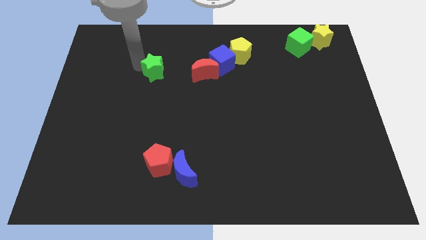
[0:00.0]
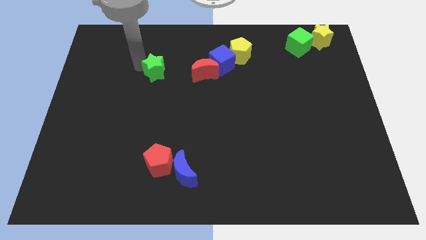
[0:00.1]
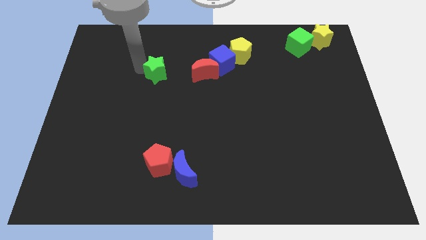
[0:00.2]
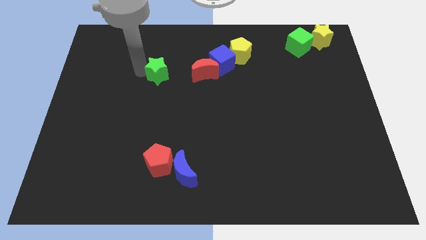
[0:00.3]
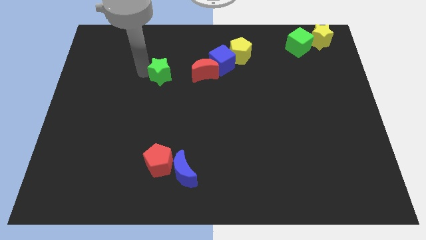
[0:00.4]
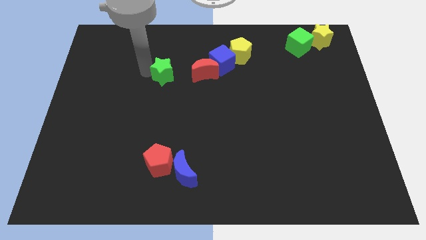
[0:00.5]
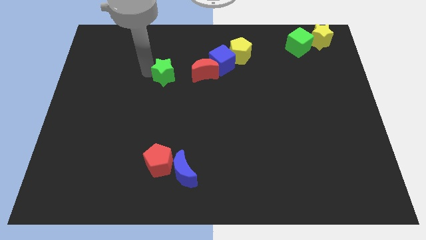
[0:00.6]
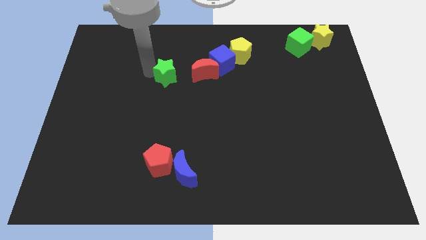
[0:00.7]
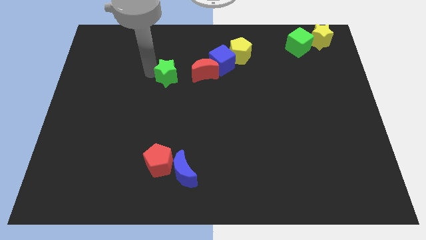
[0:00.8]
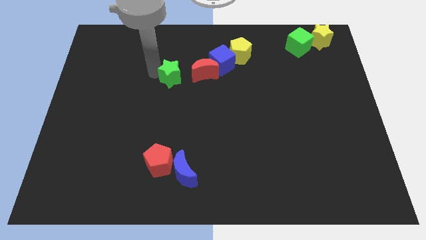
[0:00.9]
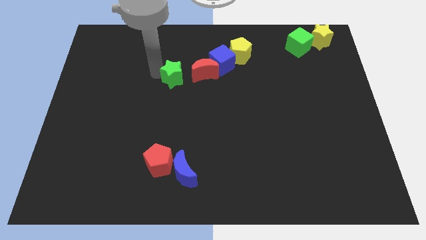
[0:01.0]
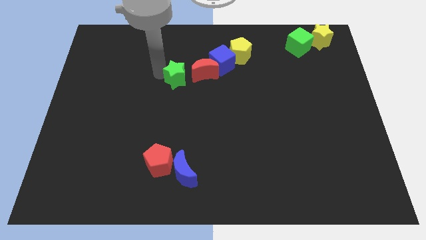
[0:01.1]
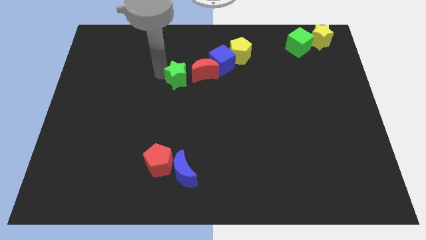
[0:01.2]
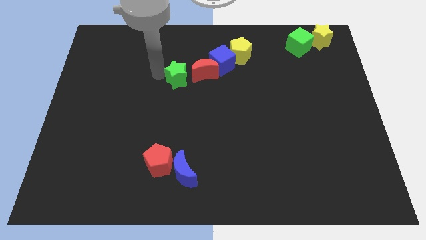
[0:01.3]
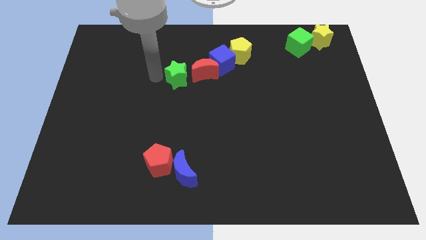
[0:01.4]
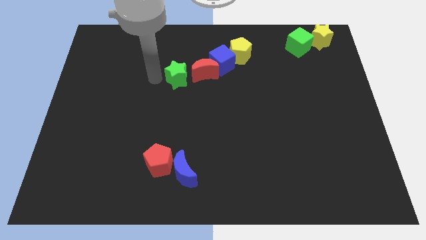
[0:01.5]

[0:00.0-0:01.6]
push the green star into the red moon

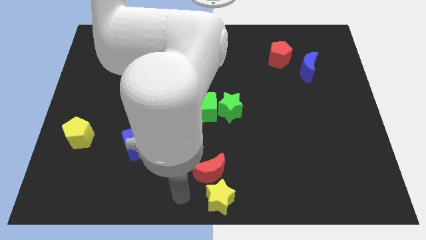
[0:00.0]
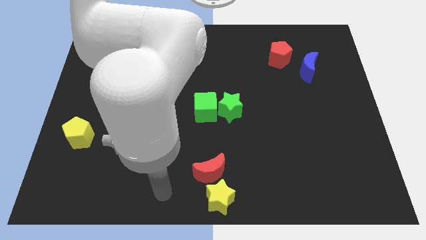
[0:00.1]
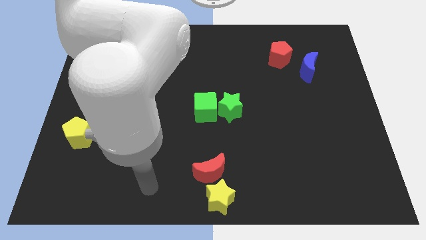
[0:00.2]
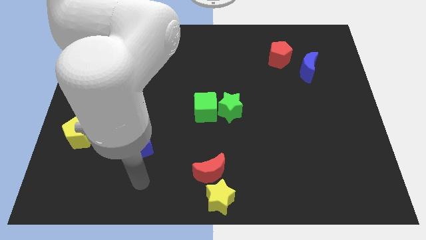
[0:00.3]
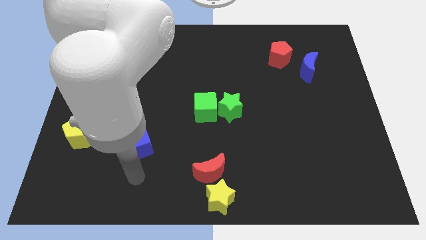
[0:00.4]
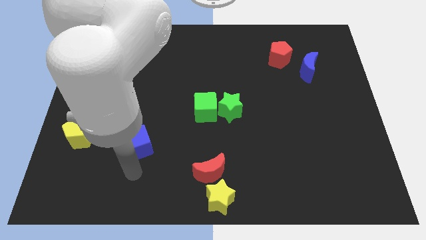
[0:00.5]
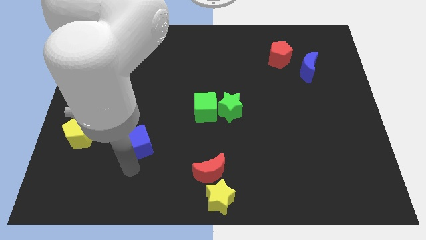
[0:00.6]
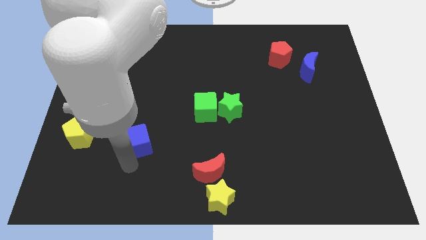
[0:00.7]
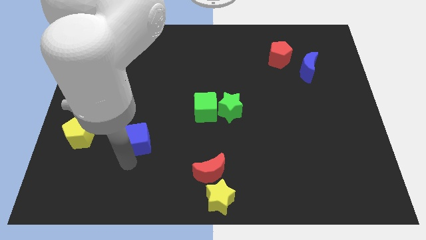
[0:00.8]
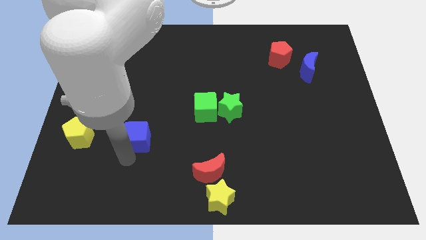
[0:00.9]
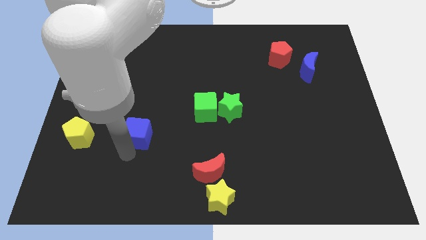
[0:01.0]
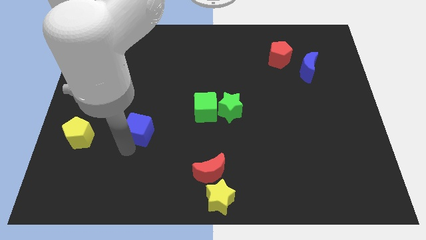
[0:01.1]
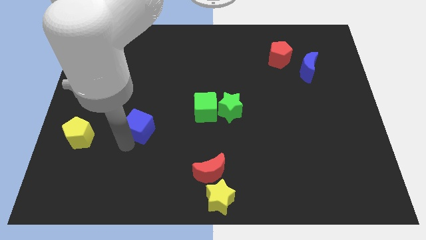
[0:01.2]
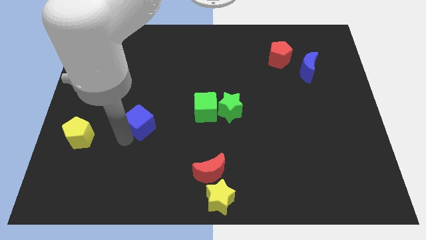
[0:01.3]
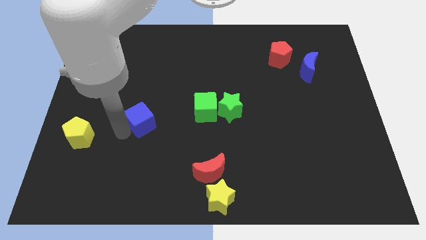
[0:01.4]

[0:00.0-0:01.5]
move your arm away from the yellow star

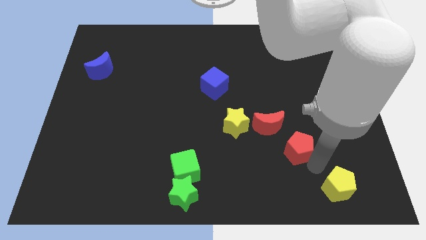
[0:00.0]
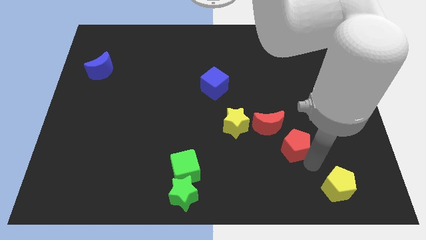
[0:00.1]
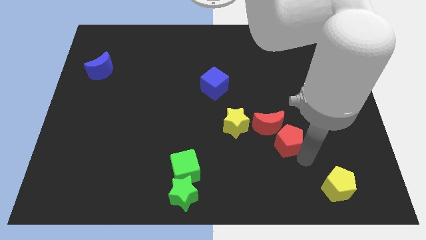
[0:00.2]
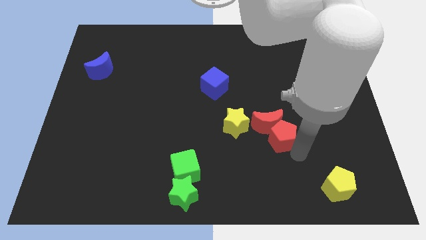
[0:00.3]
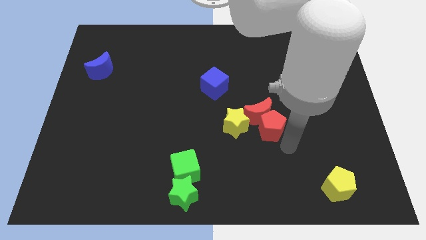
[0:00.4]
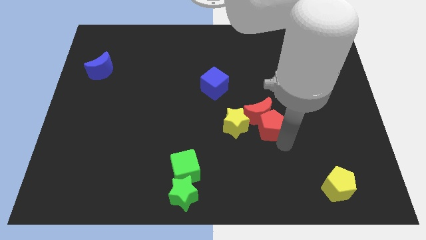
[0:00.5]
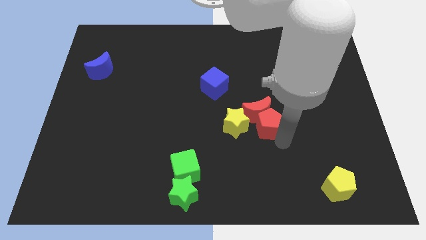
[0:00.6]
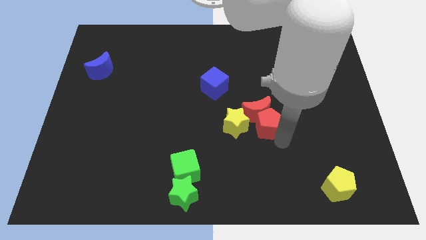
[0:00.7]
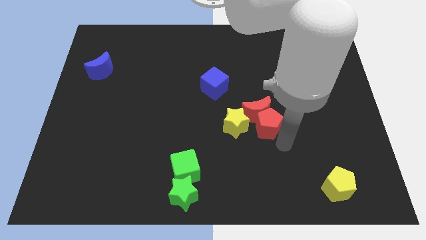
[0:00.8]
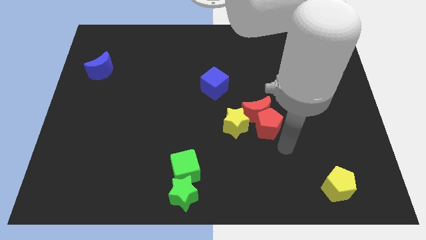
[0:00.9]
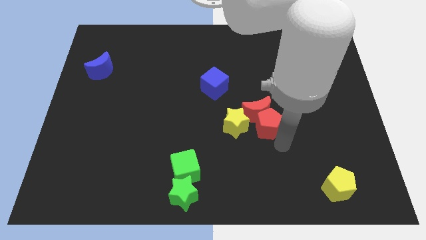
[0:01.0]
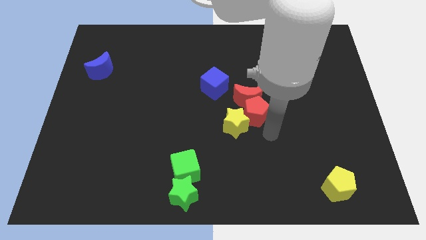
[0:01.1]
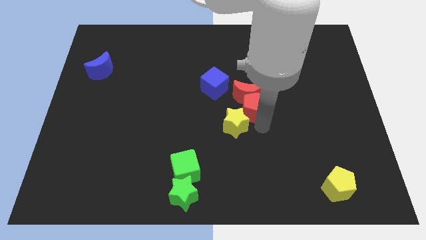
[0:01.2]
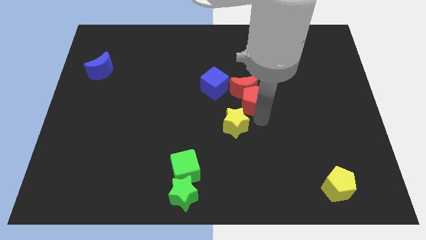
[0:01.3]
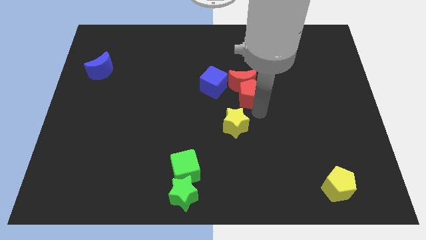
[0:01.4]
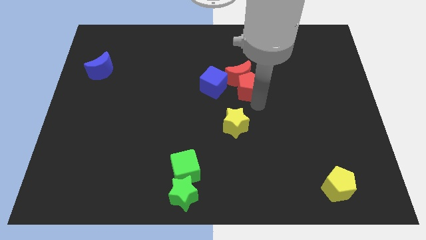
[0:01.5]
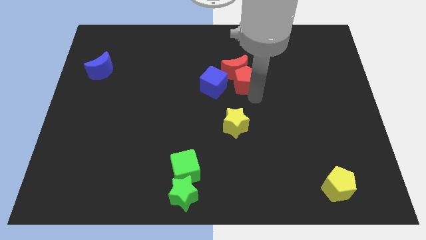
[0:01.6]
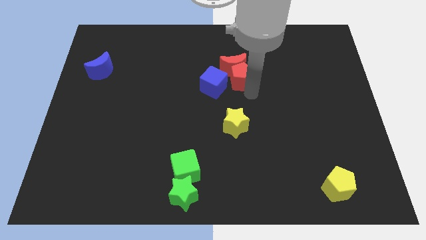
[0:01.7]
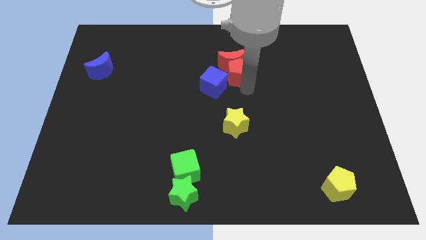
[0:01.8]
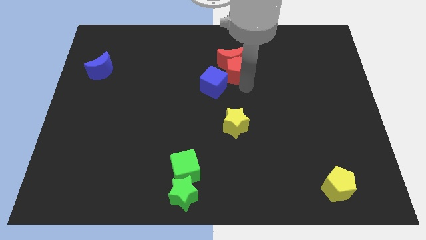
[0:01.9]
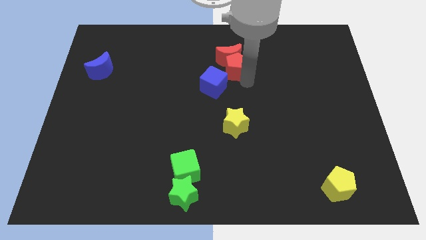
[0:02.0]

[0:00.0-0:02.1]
push the red pentagon into the red moon

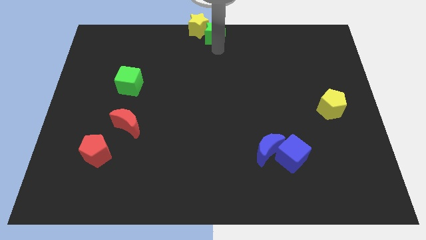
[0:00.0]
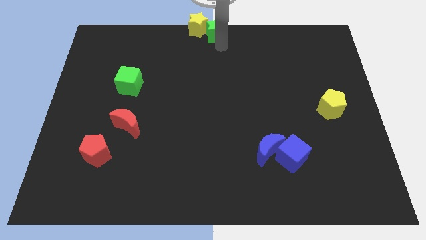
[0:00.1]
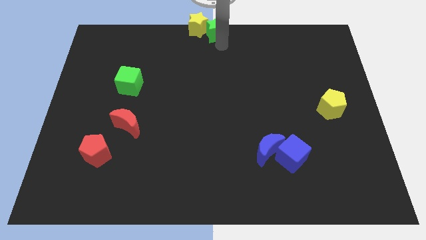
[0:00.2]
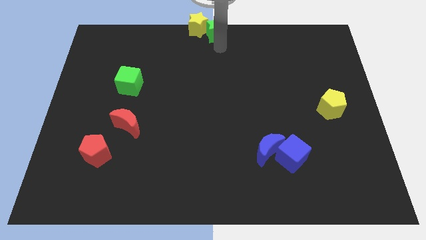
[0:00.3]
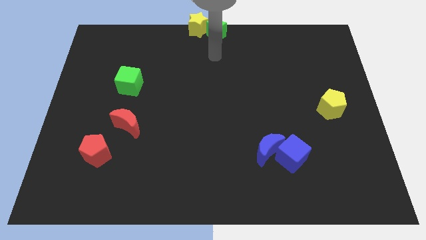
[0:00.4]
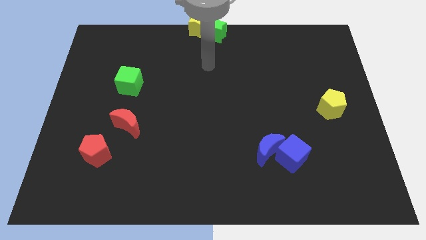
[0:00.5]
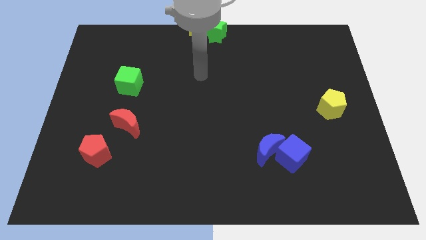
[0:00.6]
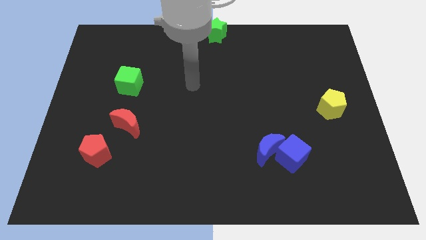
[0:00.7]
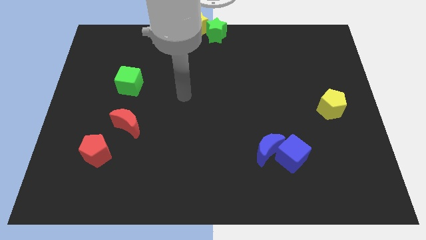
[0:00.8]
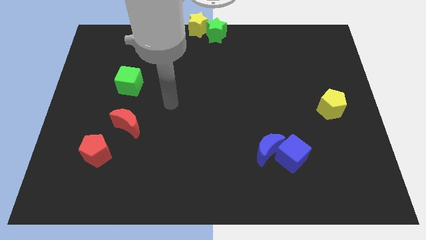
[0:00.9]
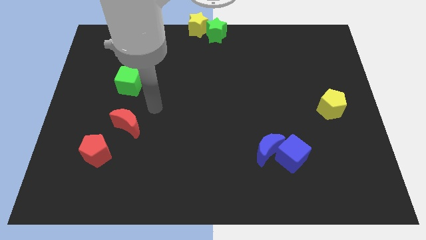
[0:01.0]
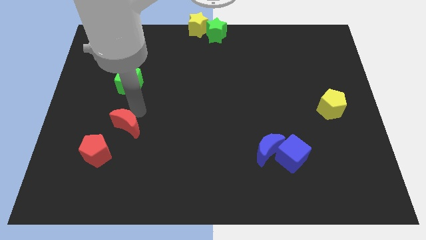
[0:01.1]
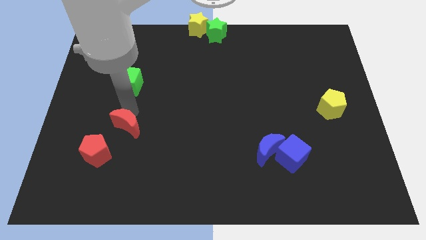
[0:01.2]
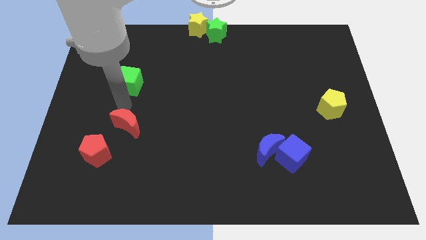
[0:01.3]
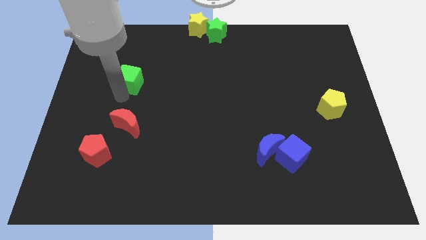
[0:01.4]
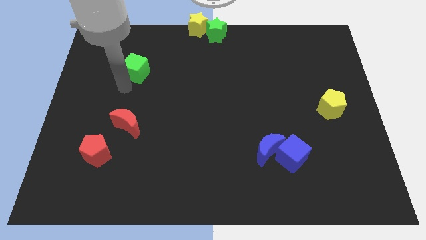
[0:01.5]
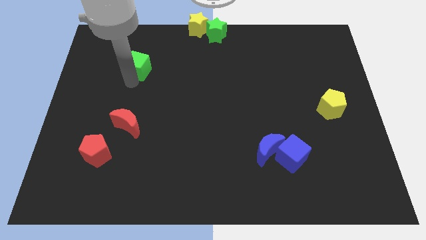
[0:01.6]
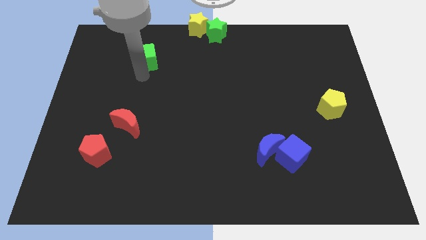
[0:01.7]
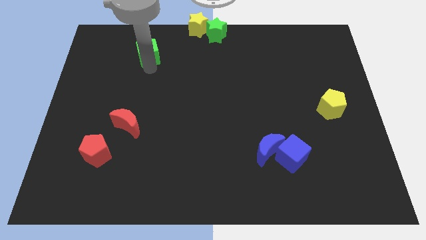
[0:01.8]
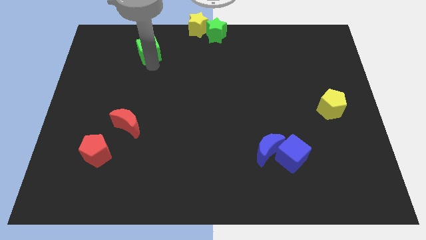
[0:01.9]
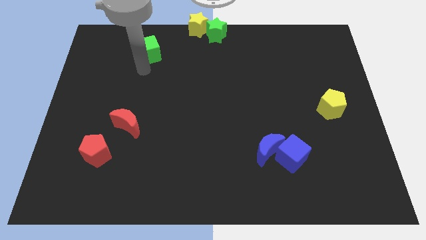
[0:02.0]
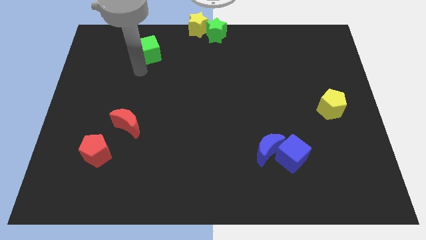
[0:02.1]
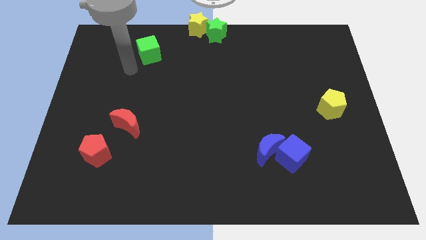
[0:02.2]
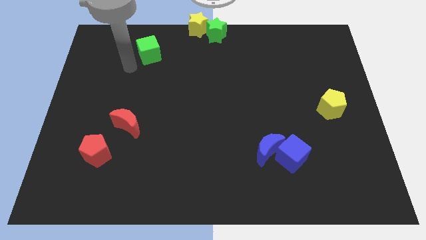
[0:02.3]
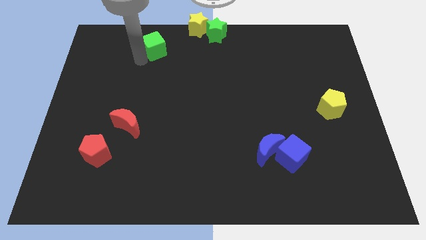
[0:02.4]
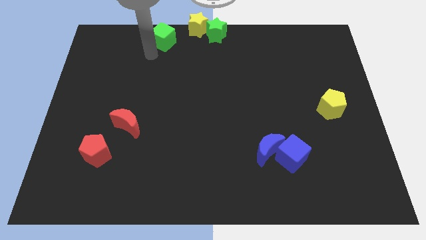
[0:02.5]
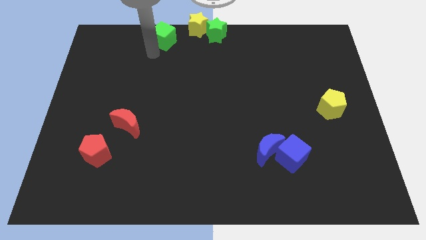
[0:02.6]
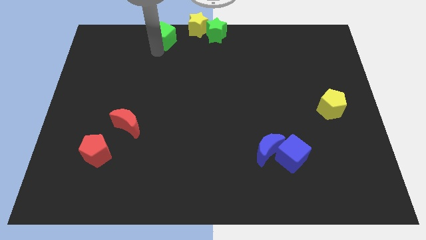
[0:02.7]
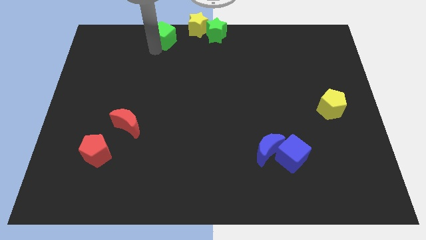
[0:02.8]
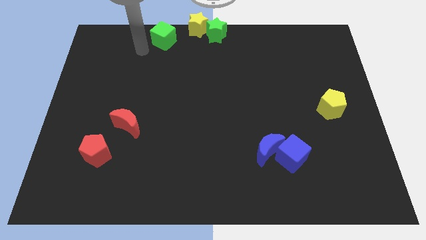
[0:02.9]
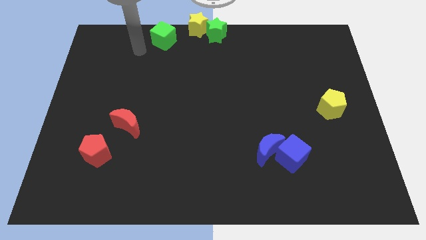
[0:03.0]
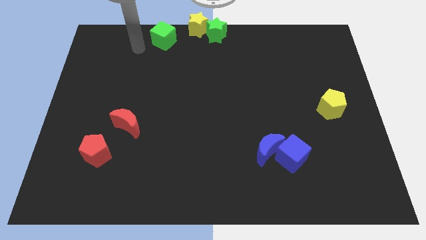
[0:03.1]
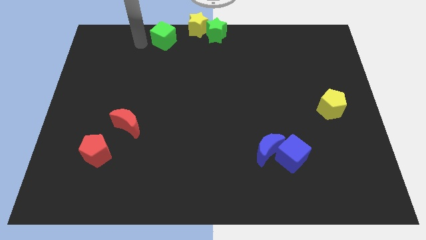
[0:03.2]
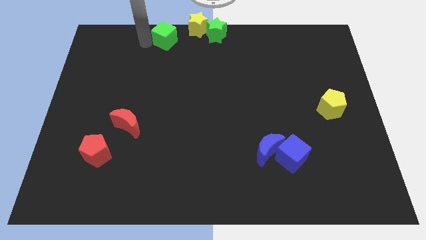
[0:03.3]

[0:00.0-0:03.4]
move the green cube slightly to the left of the yellow star

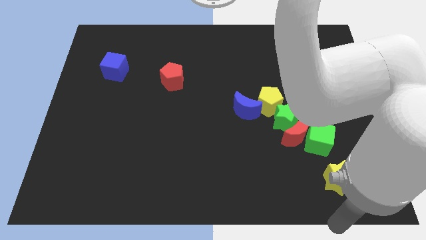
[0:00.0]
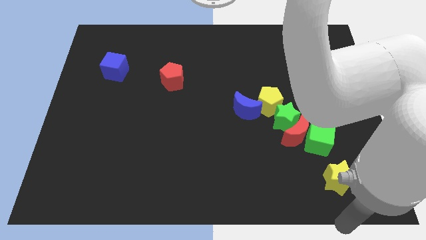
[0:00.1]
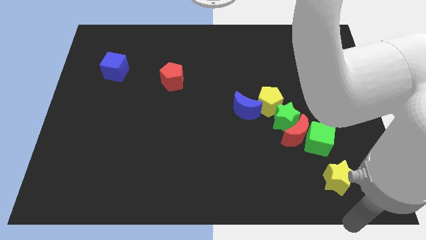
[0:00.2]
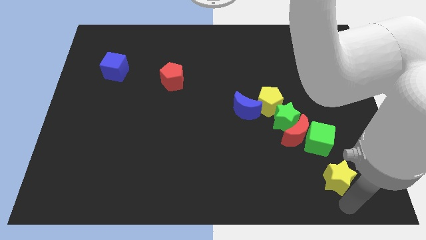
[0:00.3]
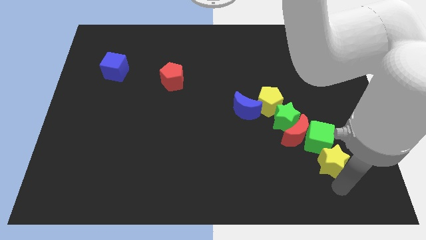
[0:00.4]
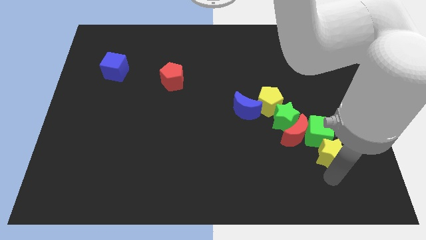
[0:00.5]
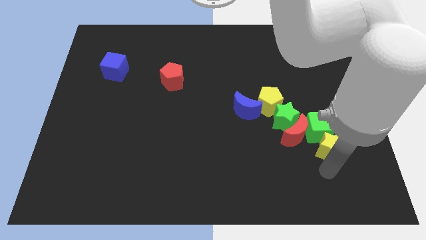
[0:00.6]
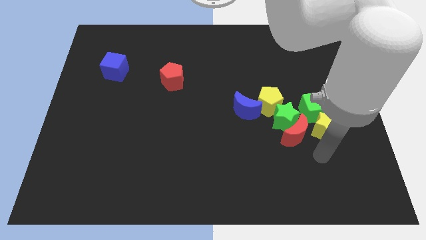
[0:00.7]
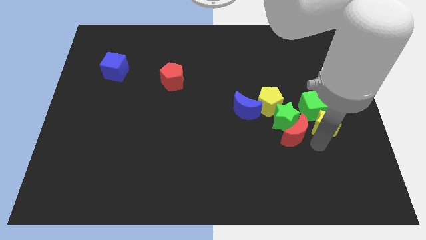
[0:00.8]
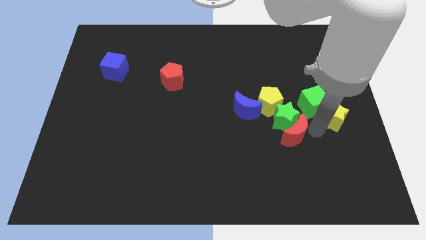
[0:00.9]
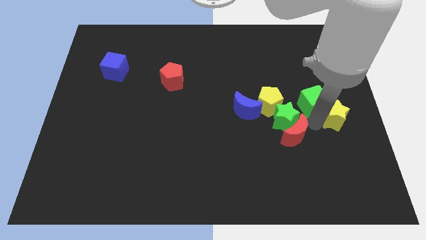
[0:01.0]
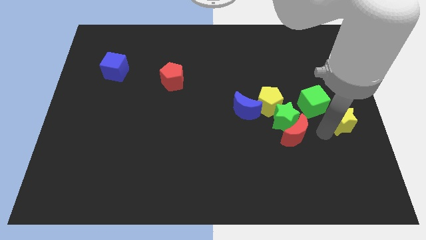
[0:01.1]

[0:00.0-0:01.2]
push the yellow star into the green cube
